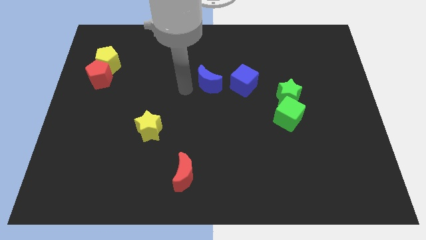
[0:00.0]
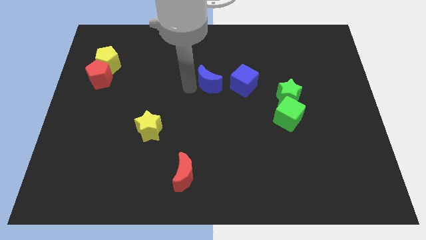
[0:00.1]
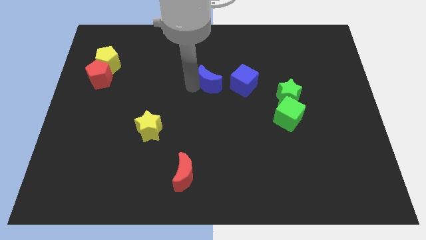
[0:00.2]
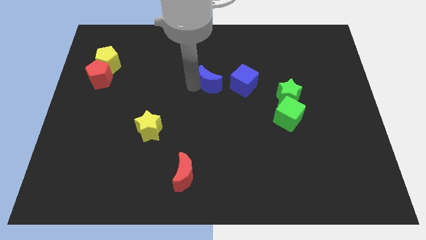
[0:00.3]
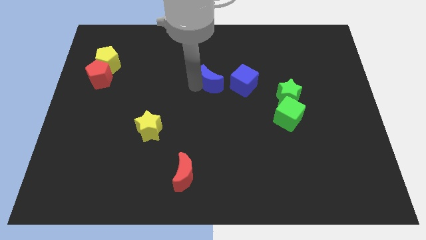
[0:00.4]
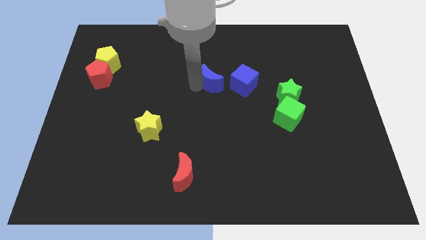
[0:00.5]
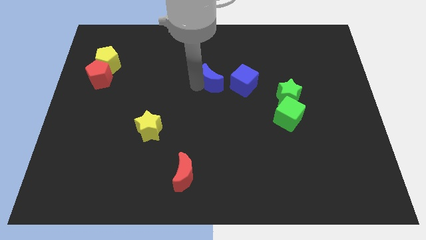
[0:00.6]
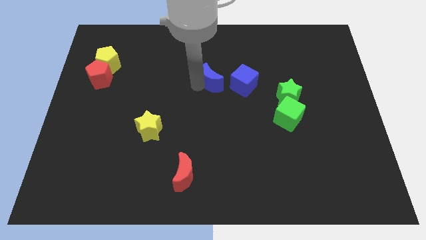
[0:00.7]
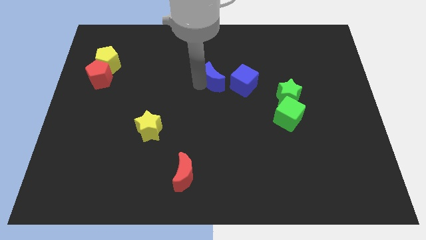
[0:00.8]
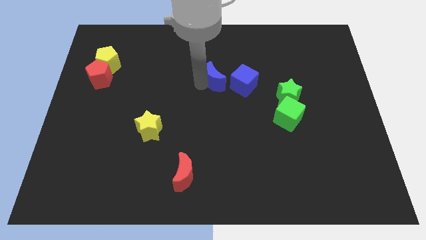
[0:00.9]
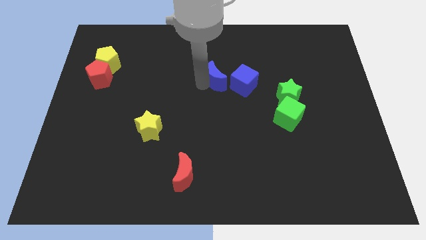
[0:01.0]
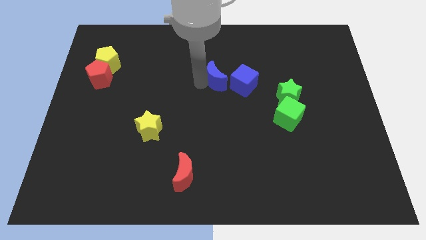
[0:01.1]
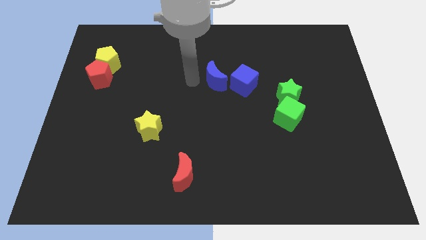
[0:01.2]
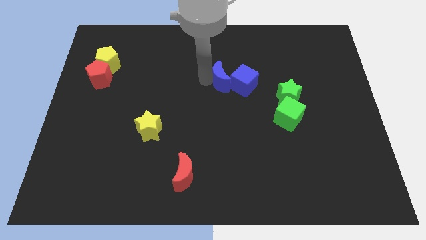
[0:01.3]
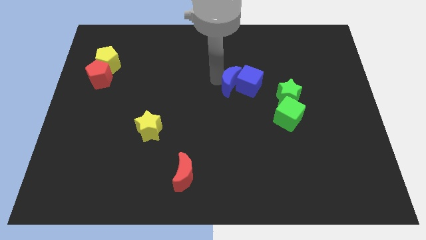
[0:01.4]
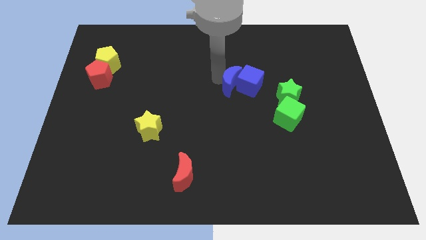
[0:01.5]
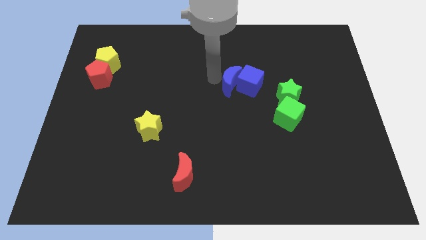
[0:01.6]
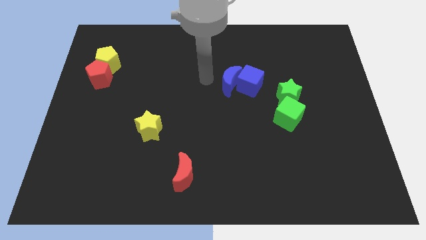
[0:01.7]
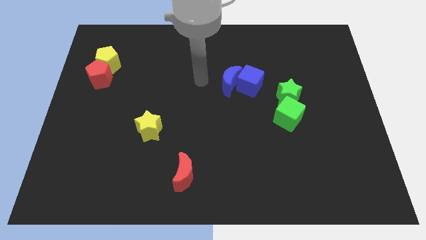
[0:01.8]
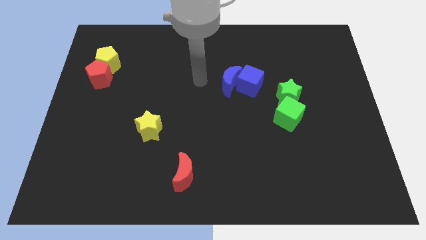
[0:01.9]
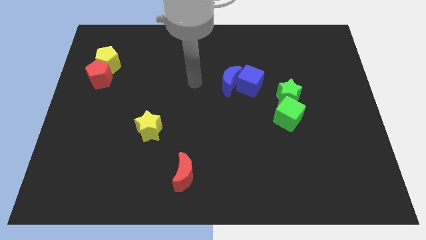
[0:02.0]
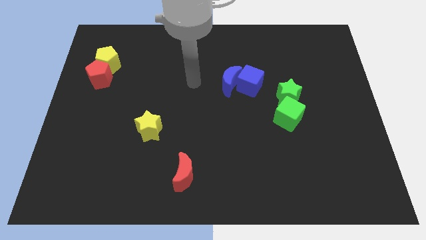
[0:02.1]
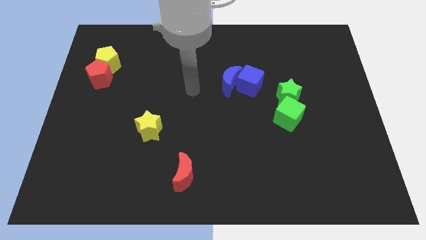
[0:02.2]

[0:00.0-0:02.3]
move the blue moon into the blue moon

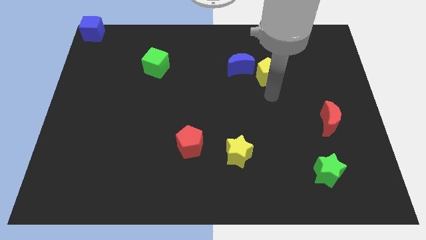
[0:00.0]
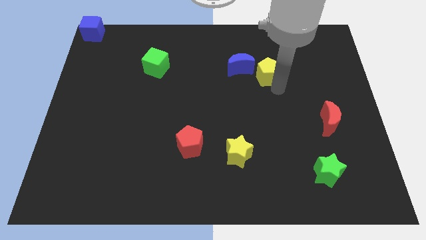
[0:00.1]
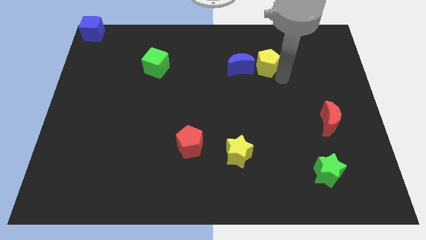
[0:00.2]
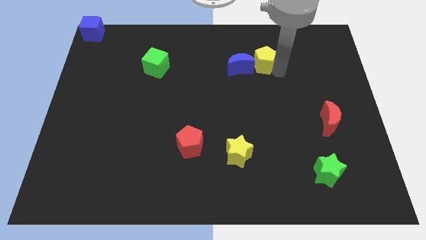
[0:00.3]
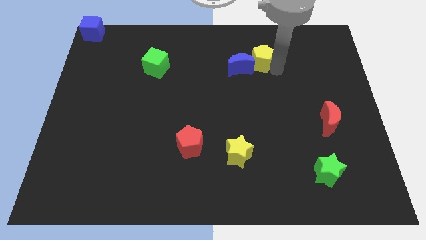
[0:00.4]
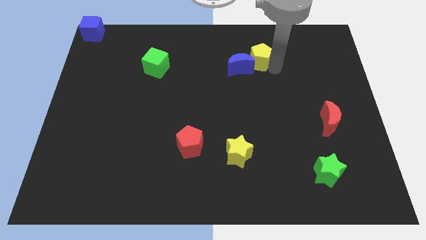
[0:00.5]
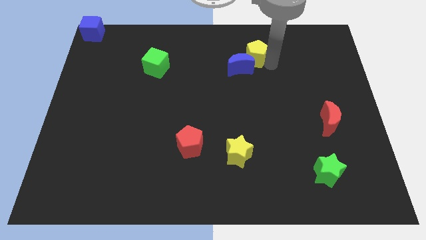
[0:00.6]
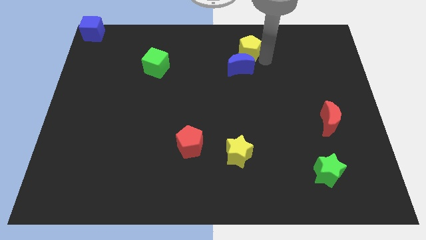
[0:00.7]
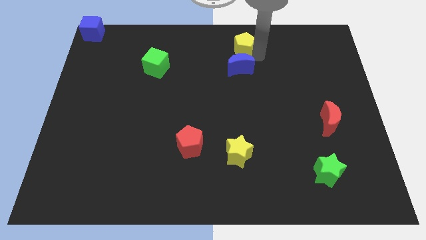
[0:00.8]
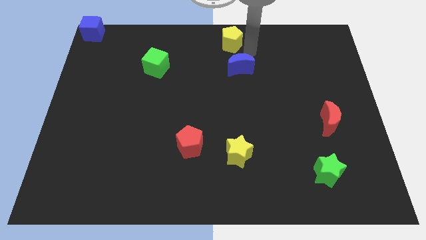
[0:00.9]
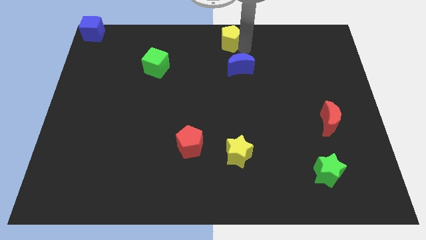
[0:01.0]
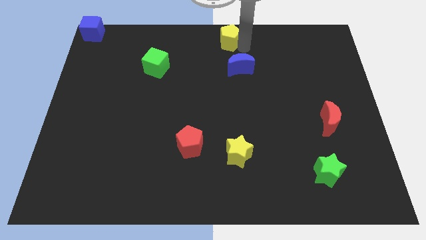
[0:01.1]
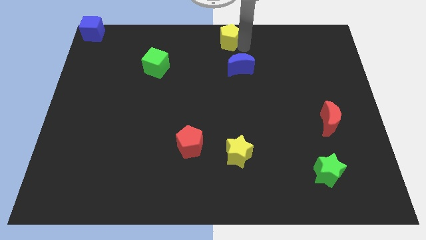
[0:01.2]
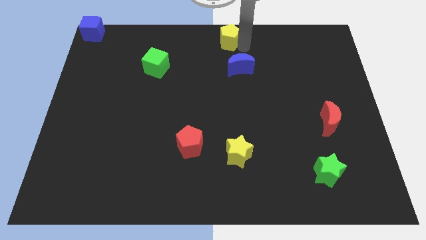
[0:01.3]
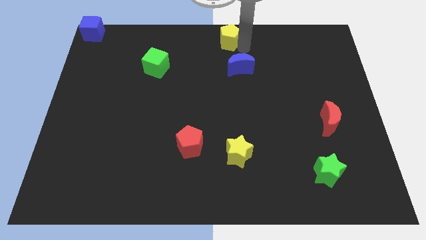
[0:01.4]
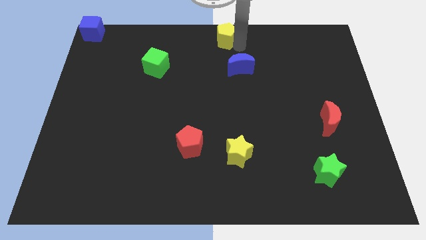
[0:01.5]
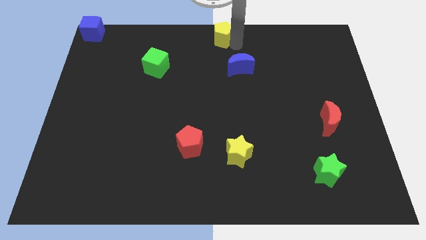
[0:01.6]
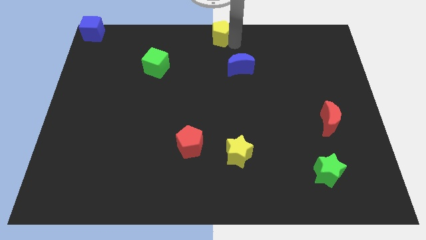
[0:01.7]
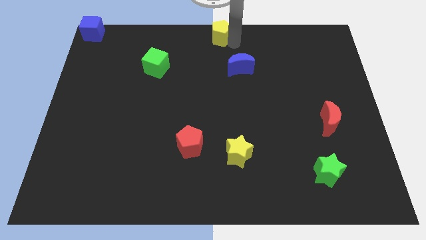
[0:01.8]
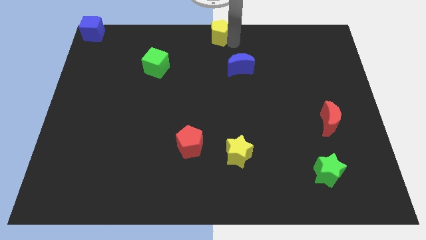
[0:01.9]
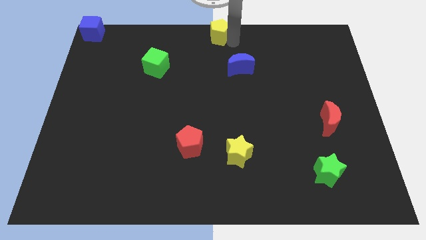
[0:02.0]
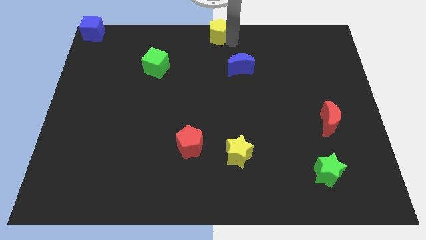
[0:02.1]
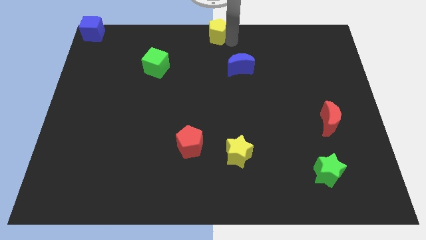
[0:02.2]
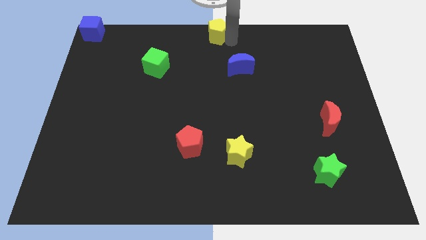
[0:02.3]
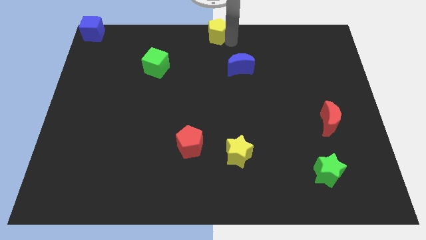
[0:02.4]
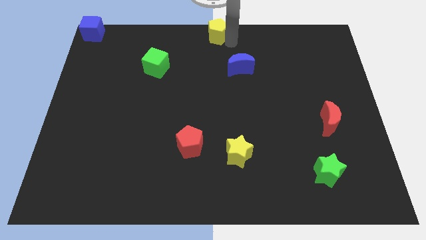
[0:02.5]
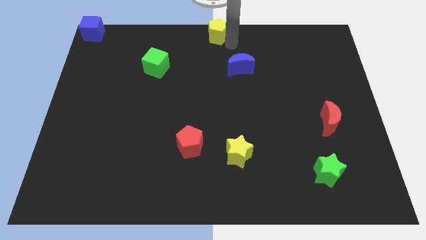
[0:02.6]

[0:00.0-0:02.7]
push the yellow pentagon to the top centre of the board

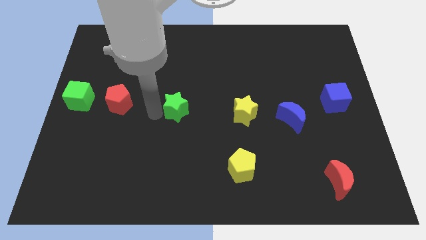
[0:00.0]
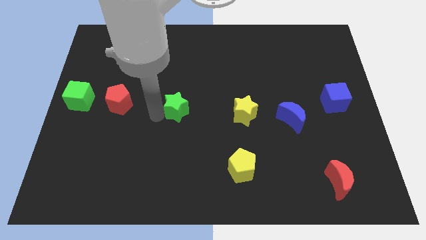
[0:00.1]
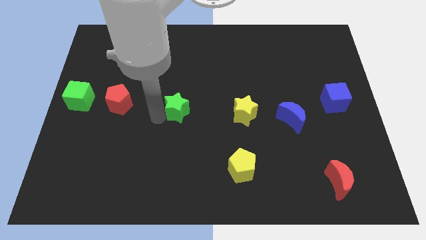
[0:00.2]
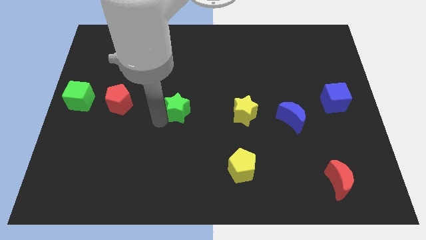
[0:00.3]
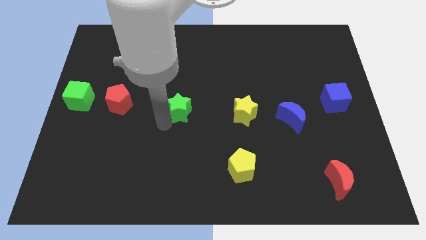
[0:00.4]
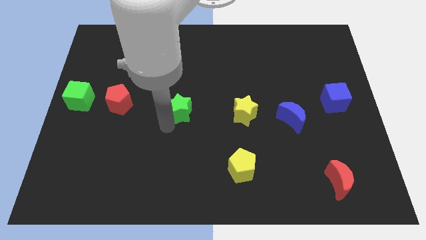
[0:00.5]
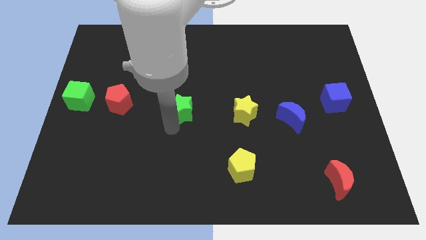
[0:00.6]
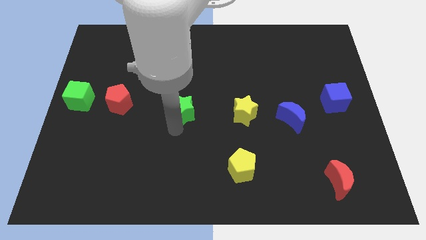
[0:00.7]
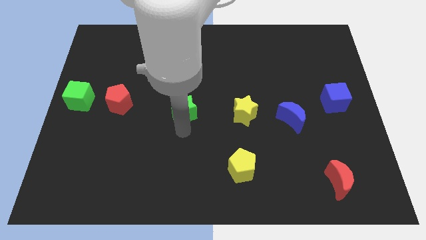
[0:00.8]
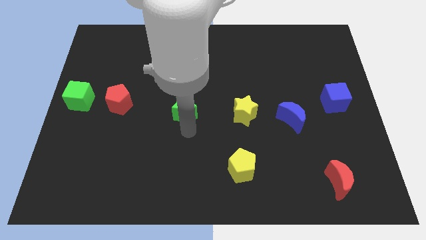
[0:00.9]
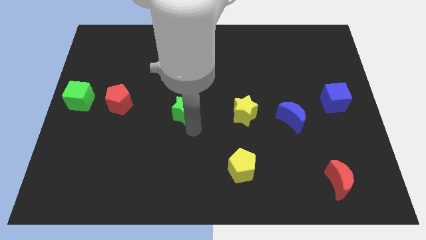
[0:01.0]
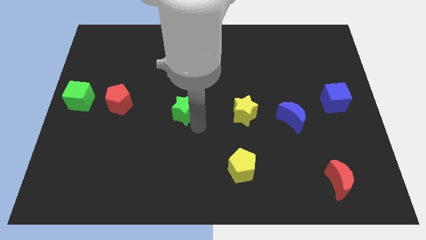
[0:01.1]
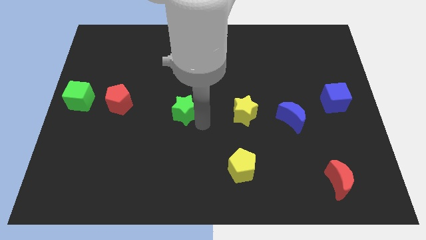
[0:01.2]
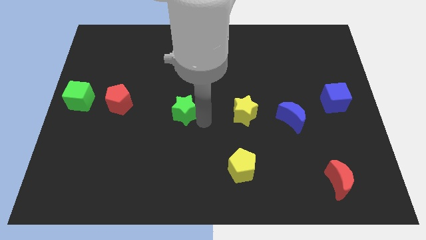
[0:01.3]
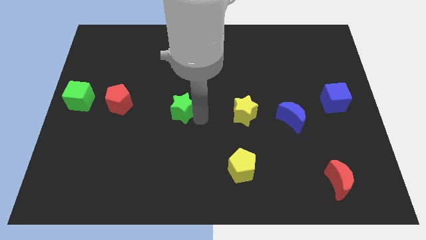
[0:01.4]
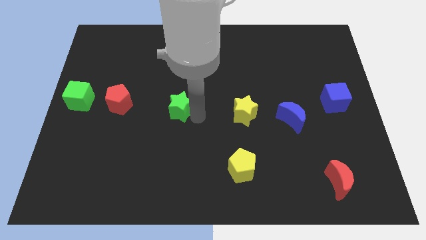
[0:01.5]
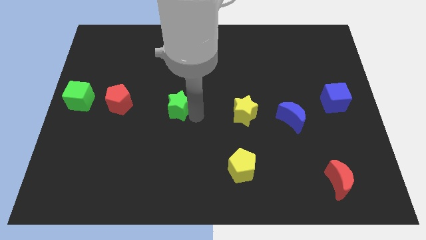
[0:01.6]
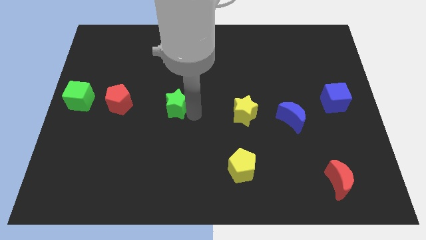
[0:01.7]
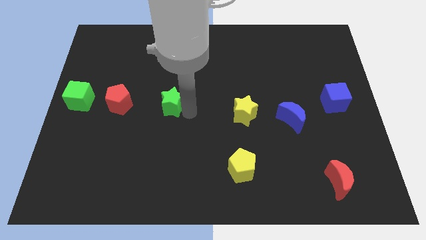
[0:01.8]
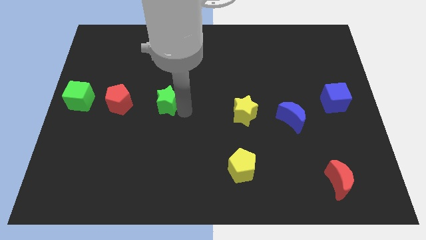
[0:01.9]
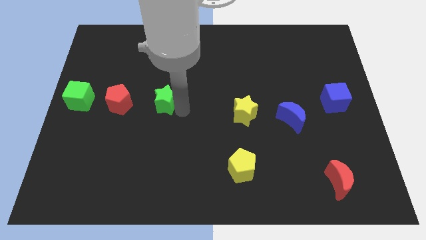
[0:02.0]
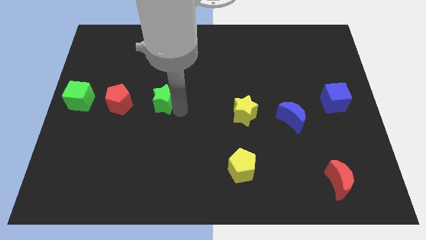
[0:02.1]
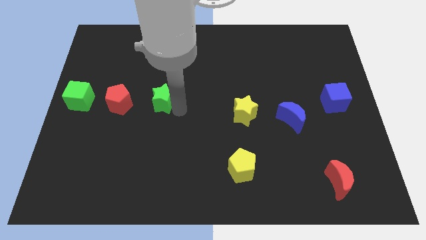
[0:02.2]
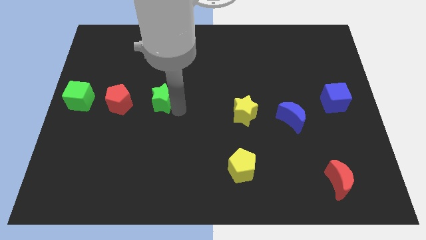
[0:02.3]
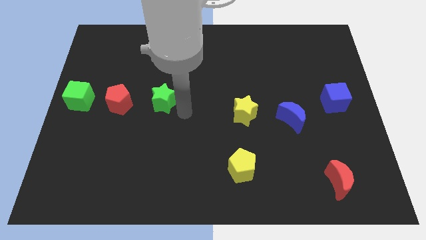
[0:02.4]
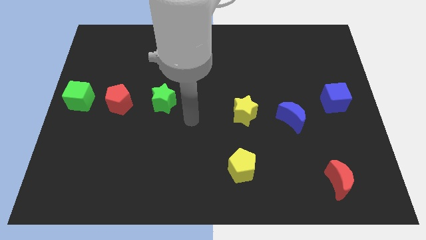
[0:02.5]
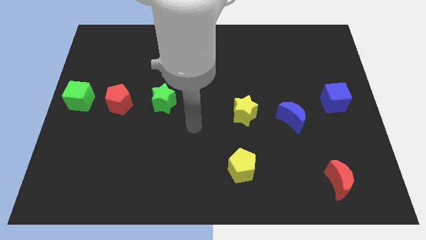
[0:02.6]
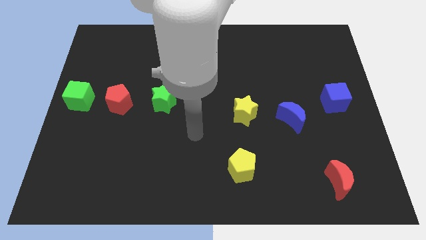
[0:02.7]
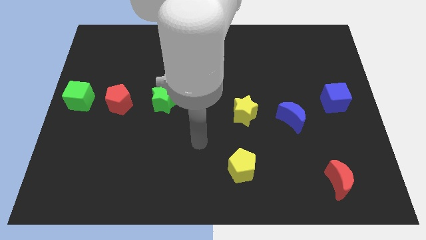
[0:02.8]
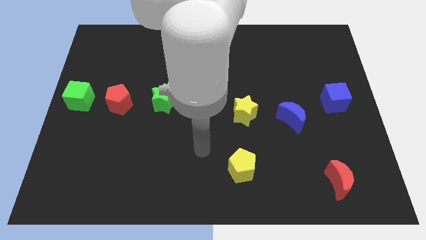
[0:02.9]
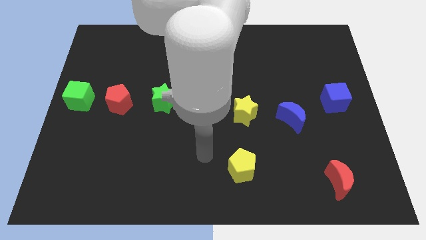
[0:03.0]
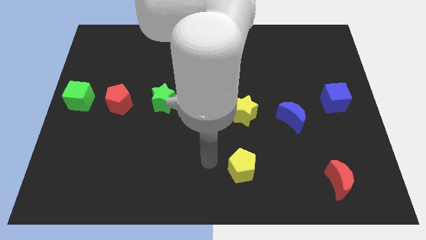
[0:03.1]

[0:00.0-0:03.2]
slightly move the green star towards the red pentagon

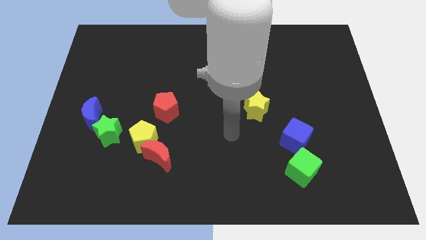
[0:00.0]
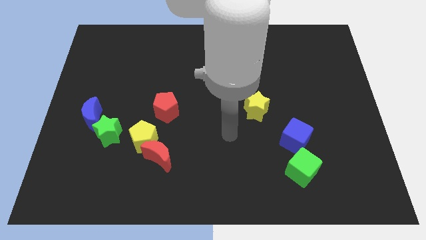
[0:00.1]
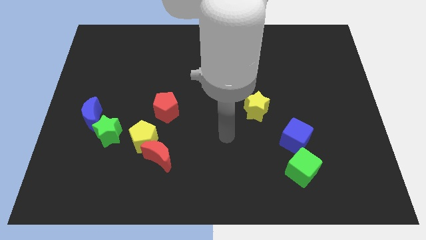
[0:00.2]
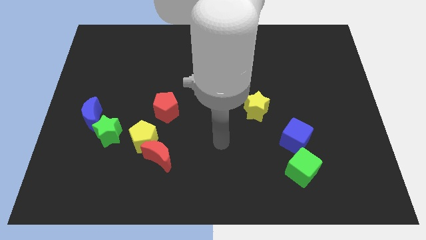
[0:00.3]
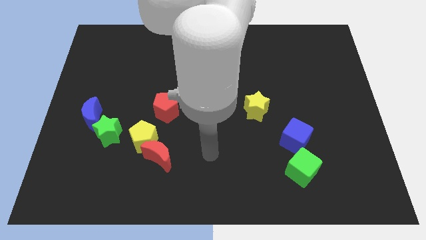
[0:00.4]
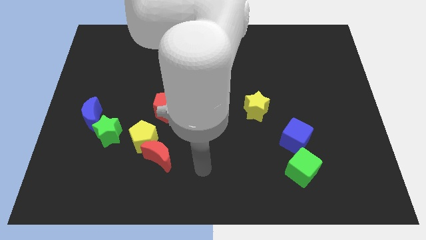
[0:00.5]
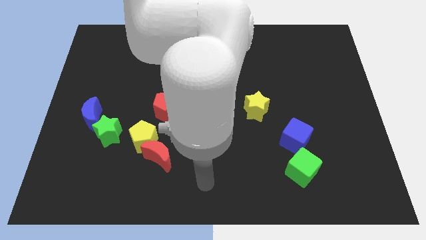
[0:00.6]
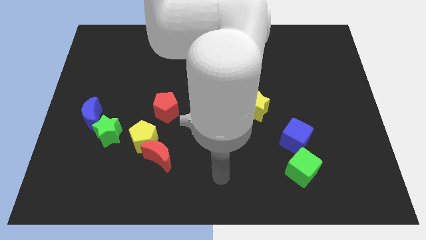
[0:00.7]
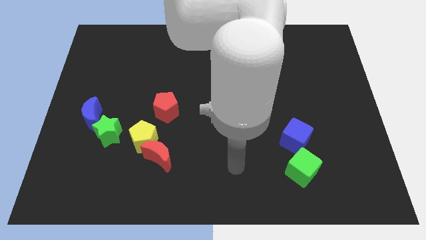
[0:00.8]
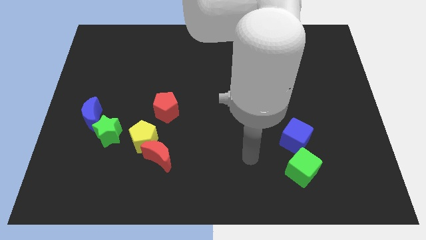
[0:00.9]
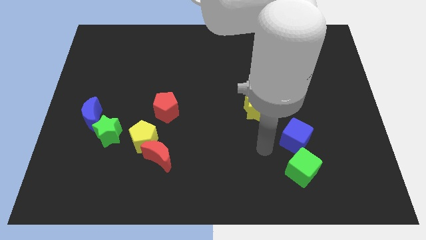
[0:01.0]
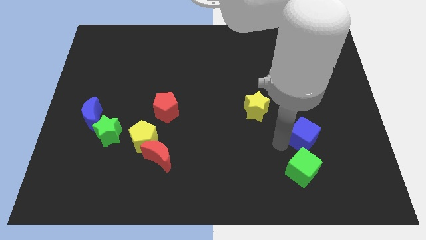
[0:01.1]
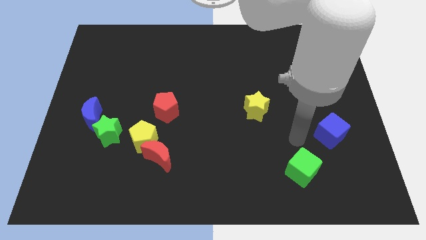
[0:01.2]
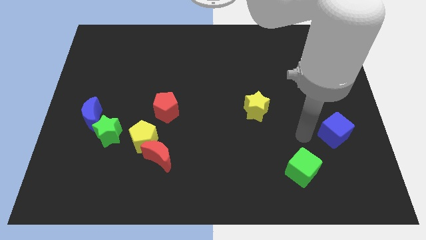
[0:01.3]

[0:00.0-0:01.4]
move the blue cube to the right of the board
